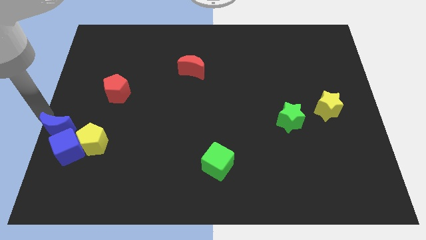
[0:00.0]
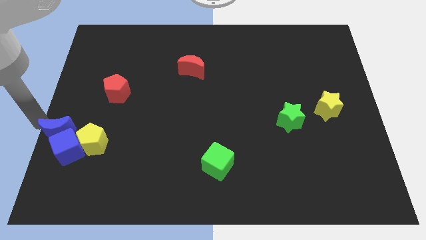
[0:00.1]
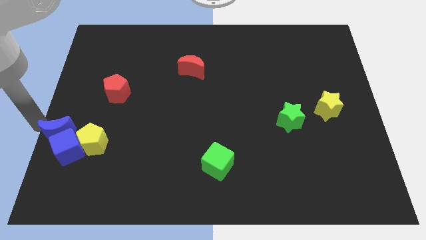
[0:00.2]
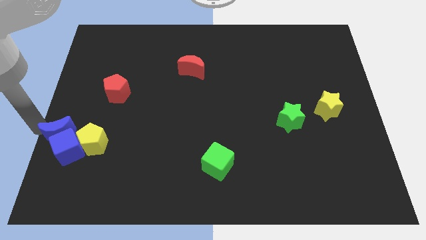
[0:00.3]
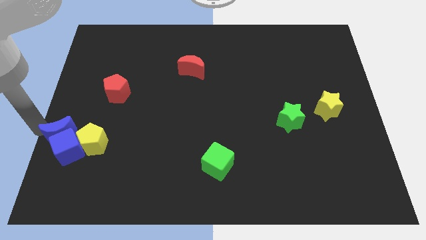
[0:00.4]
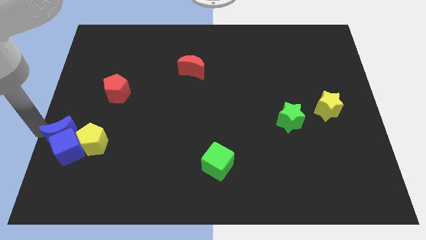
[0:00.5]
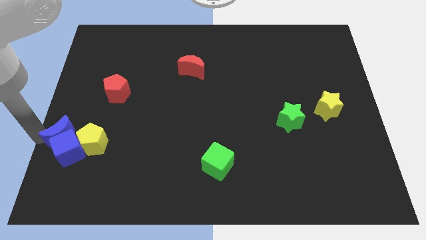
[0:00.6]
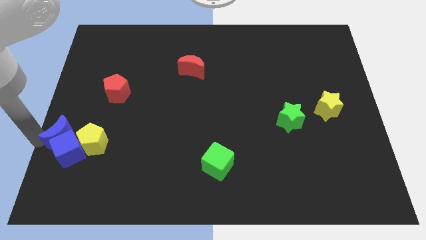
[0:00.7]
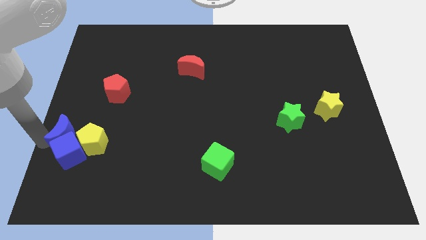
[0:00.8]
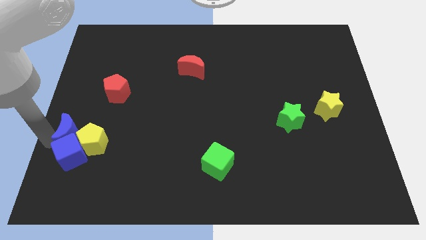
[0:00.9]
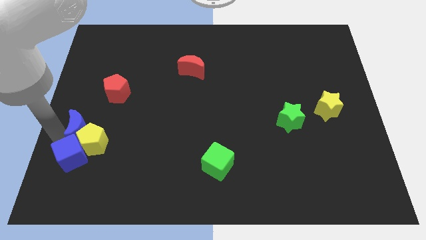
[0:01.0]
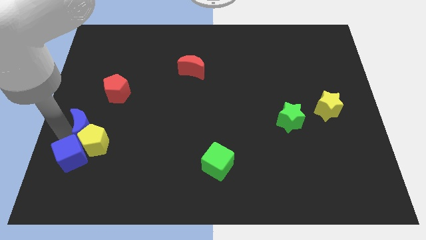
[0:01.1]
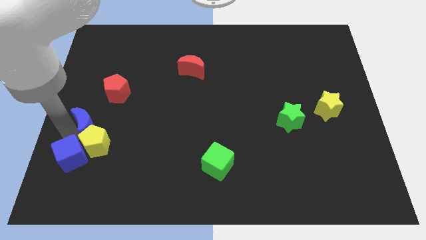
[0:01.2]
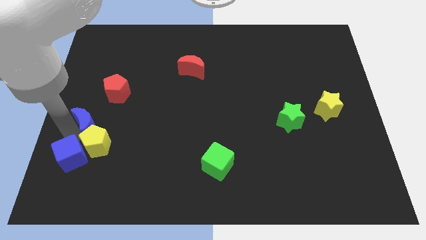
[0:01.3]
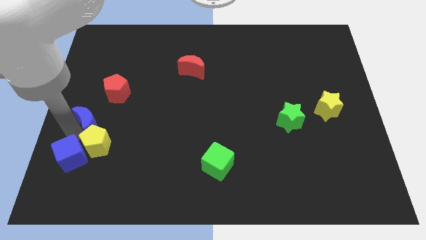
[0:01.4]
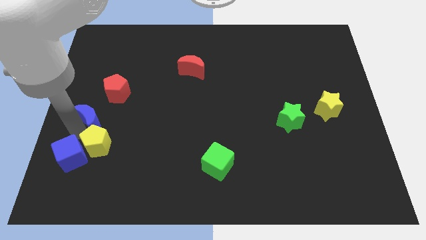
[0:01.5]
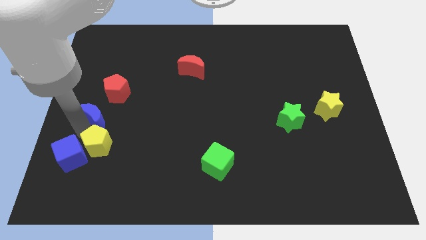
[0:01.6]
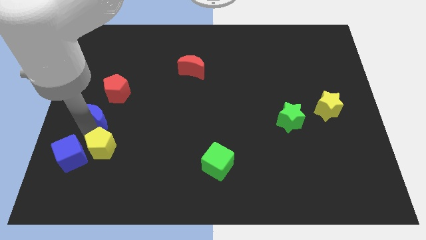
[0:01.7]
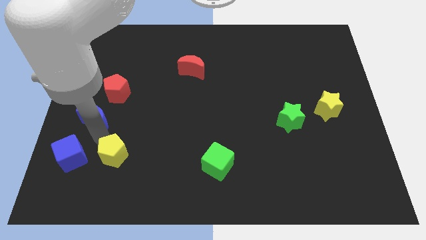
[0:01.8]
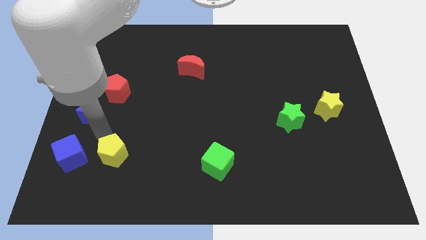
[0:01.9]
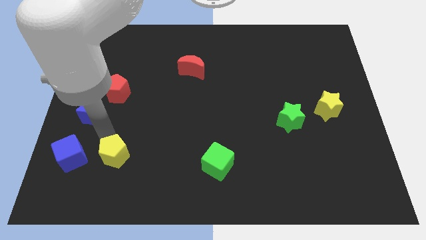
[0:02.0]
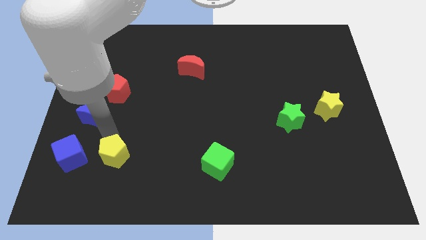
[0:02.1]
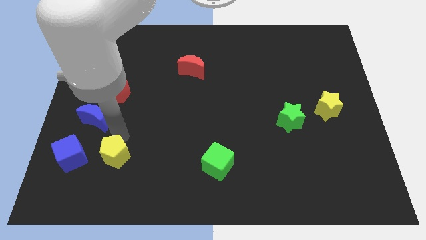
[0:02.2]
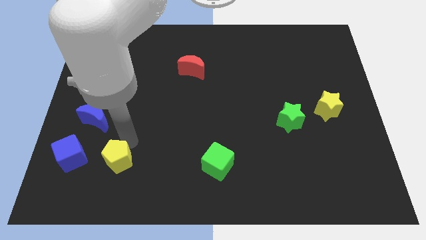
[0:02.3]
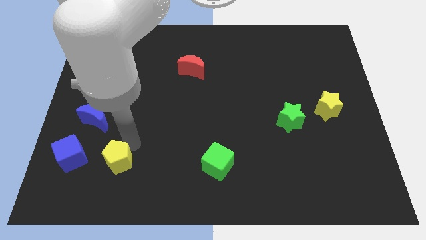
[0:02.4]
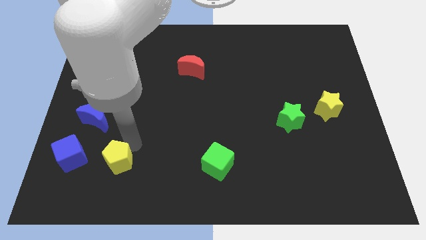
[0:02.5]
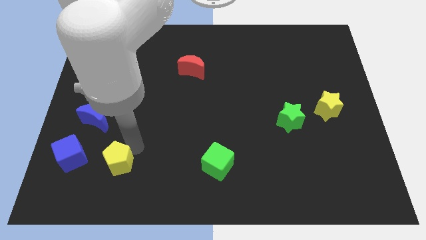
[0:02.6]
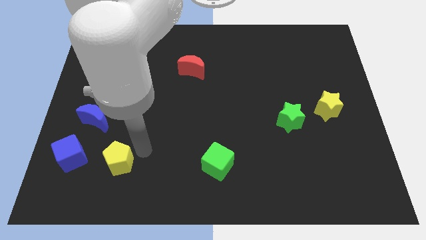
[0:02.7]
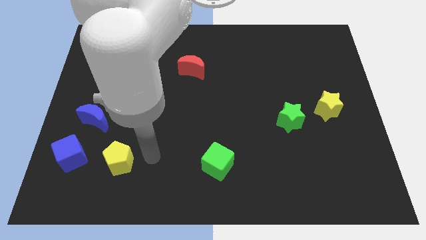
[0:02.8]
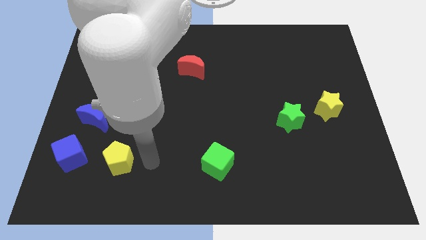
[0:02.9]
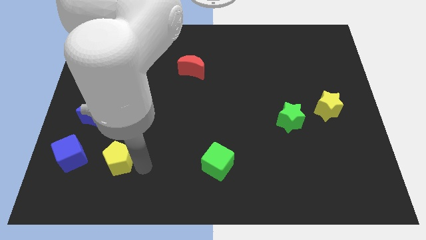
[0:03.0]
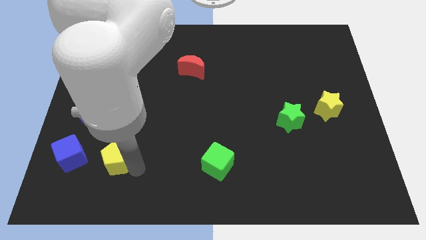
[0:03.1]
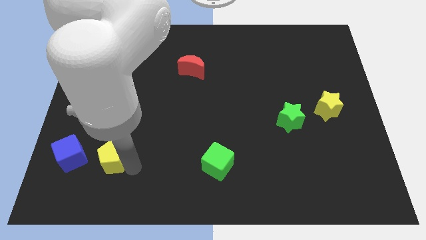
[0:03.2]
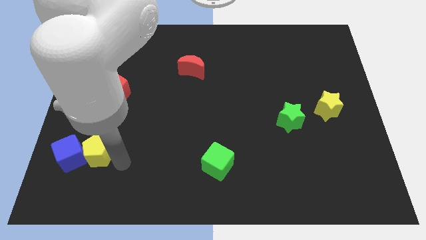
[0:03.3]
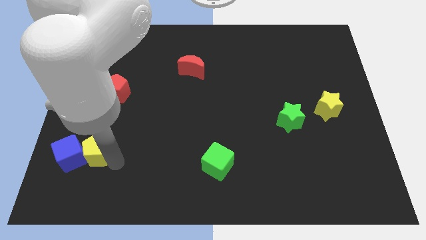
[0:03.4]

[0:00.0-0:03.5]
separate blue moon from blue cube

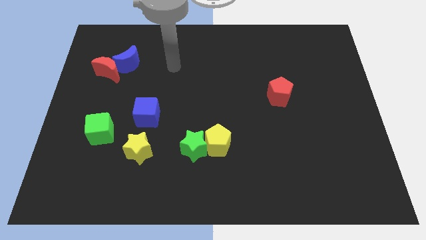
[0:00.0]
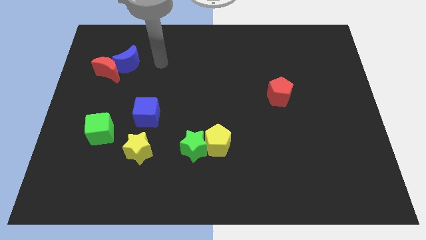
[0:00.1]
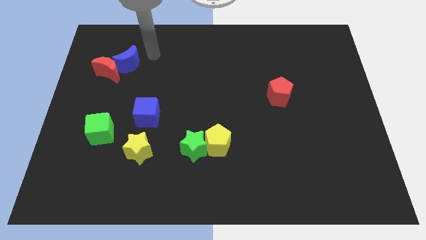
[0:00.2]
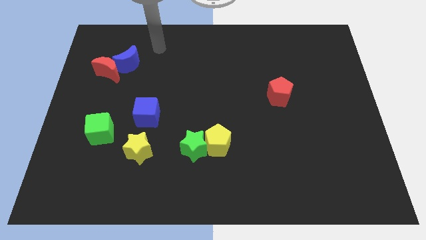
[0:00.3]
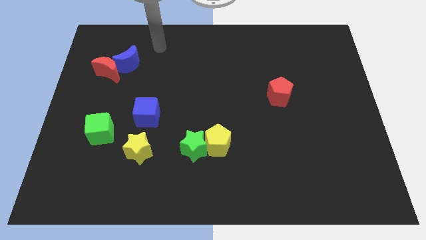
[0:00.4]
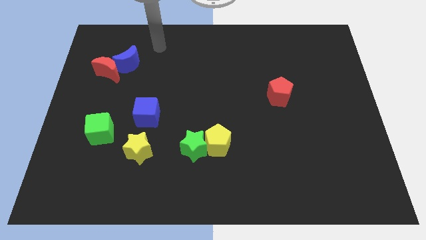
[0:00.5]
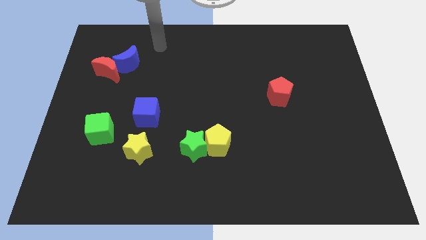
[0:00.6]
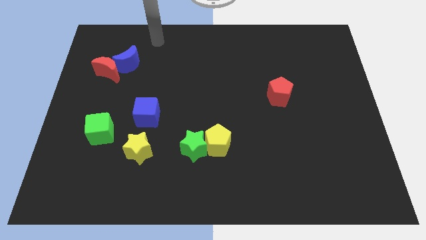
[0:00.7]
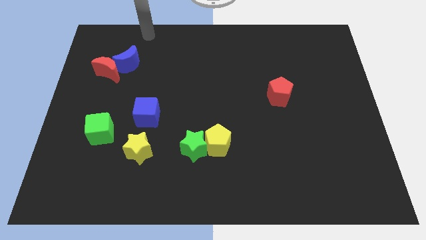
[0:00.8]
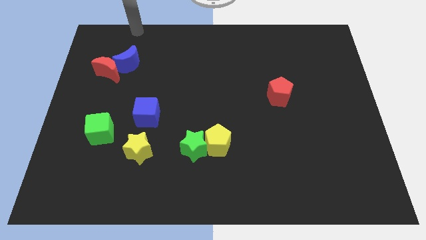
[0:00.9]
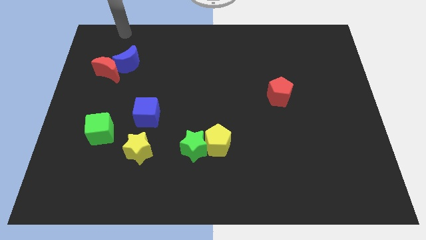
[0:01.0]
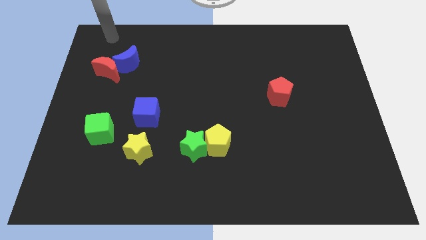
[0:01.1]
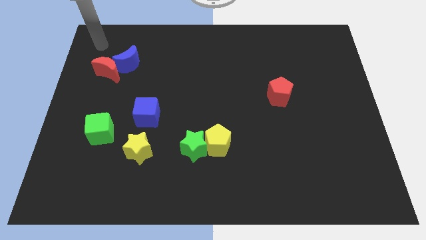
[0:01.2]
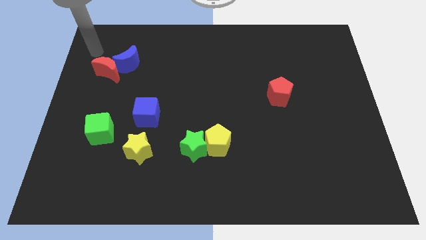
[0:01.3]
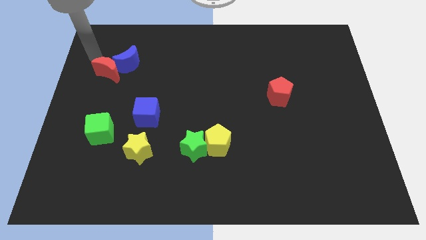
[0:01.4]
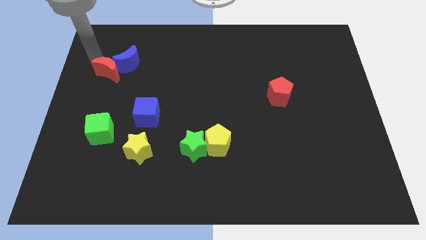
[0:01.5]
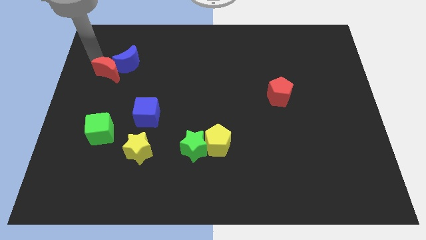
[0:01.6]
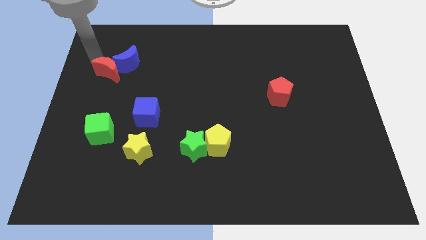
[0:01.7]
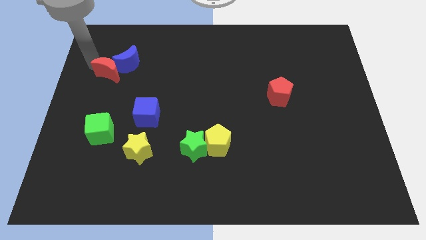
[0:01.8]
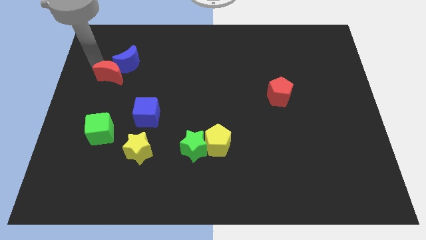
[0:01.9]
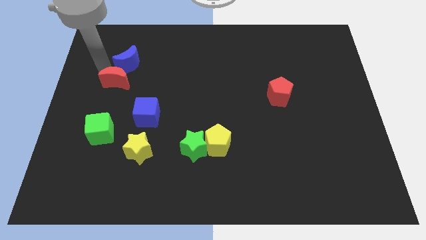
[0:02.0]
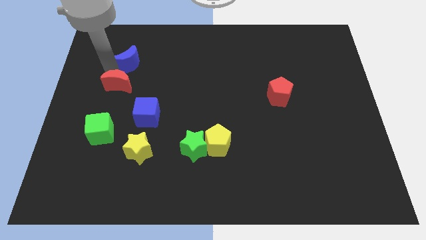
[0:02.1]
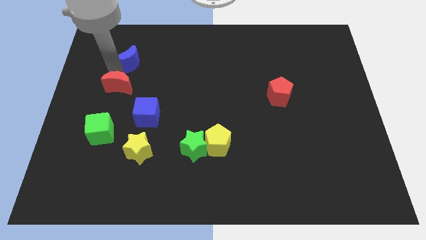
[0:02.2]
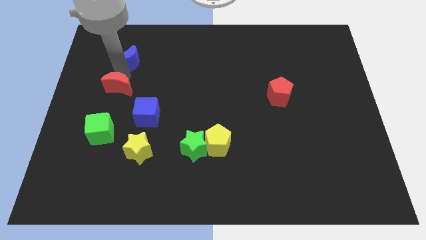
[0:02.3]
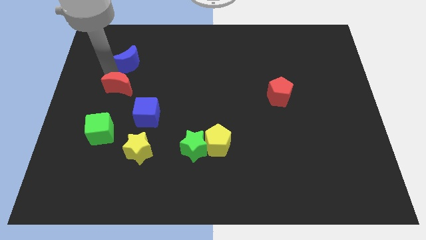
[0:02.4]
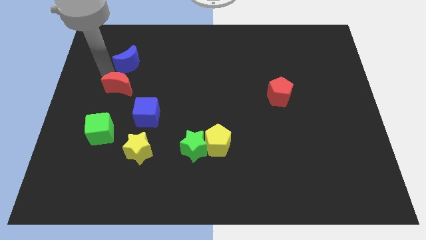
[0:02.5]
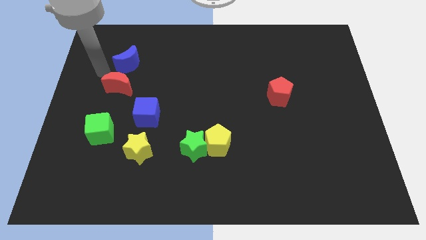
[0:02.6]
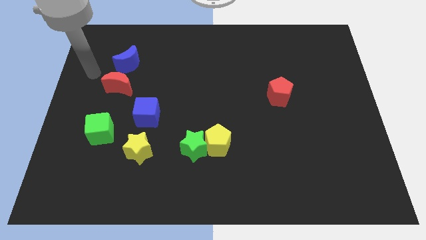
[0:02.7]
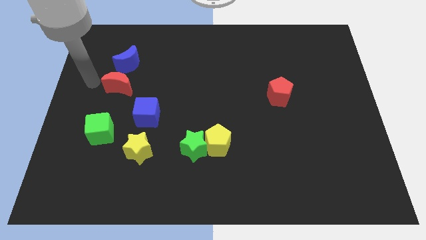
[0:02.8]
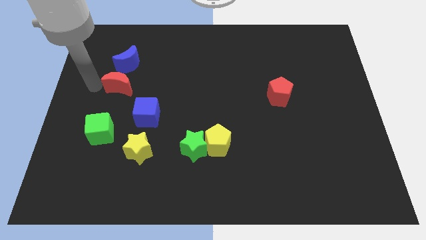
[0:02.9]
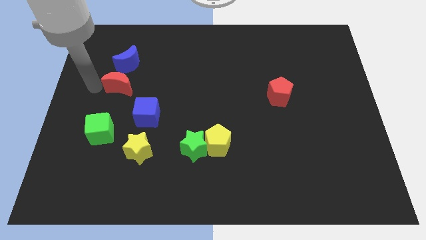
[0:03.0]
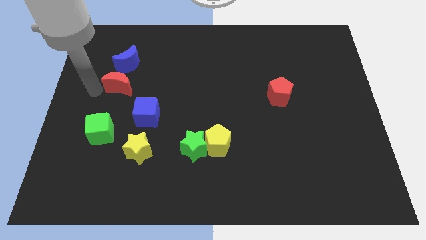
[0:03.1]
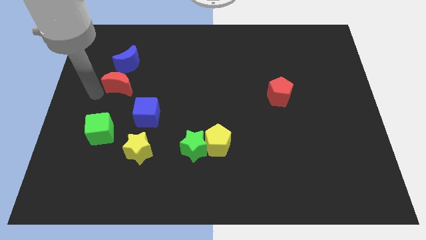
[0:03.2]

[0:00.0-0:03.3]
separate red crescent from the blue crescent

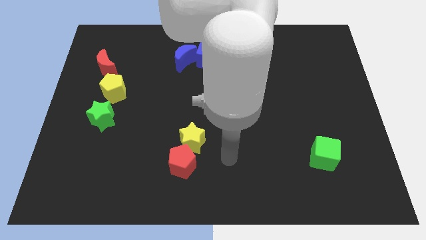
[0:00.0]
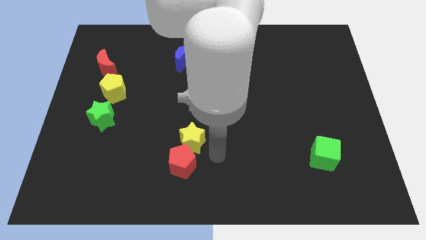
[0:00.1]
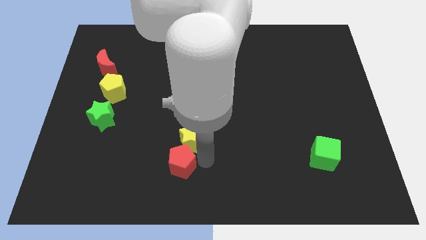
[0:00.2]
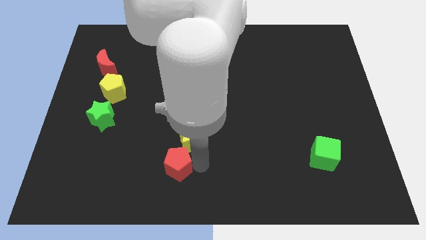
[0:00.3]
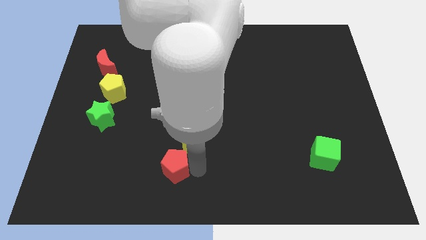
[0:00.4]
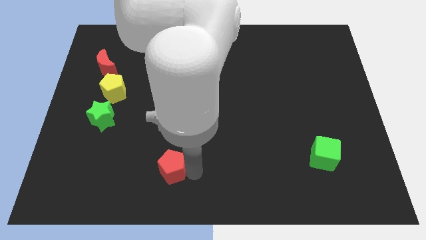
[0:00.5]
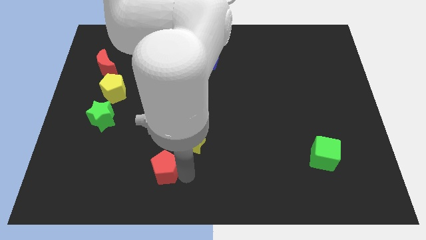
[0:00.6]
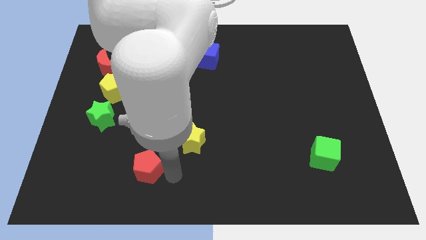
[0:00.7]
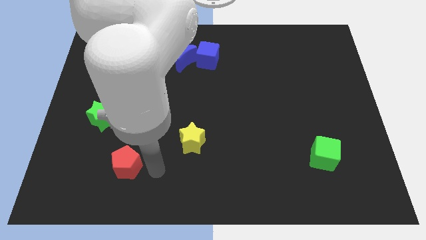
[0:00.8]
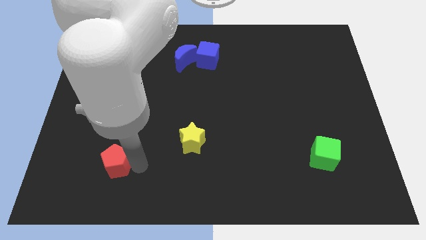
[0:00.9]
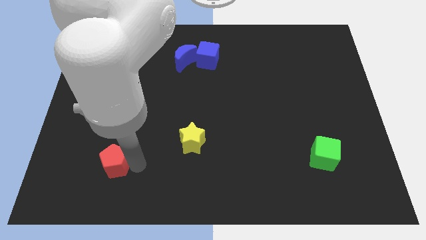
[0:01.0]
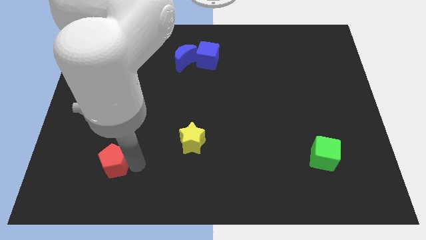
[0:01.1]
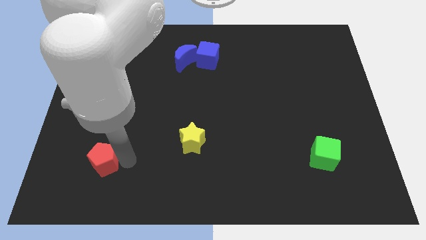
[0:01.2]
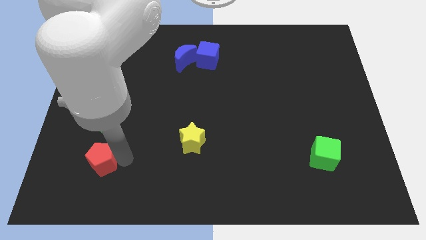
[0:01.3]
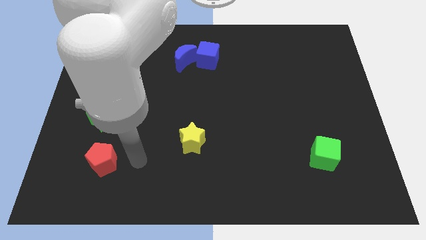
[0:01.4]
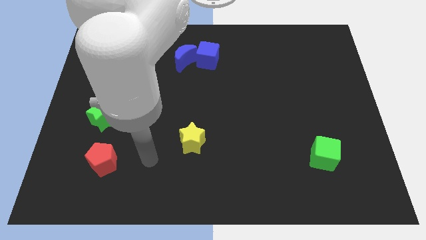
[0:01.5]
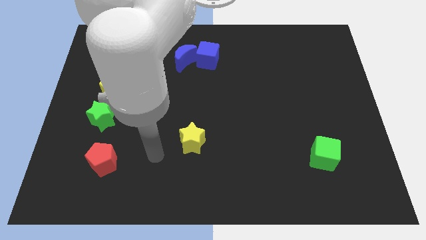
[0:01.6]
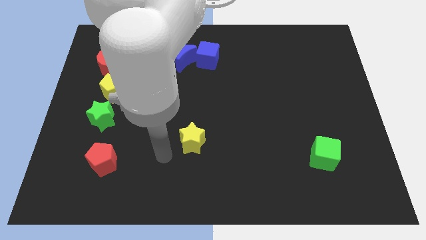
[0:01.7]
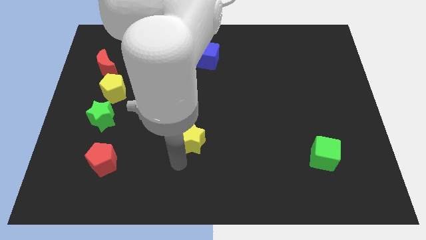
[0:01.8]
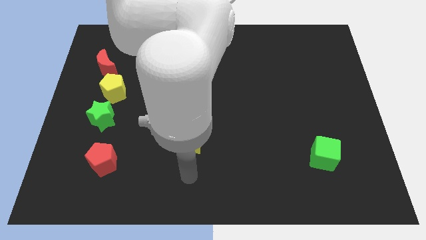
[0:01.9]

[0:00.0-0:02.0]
put the red pentagon below the green star

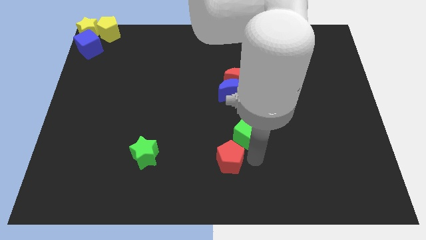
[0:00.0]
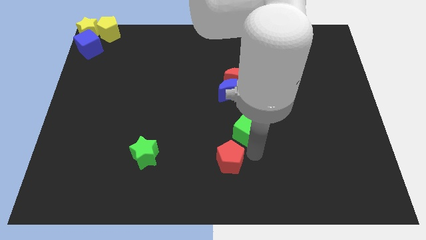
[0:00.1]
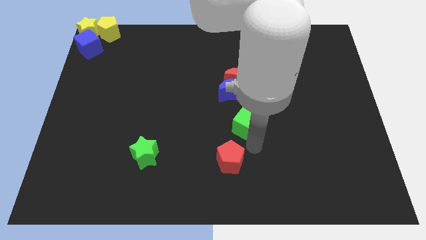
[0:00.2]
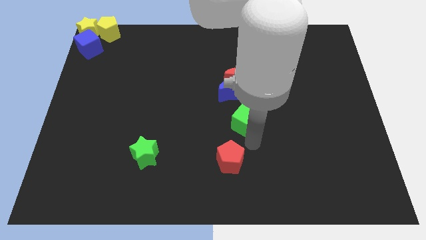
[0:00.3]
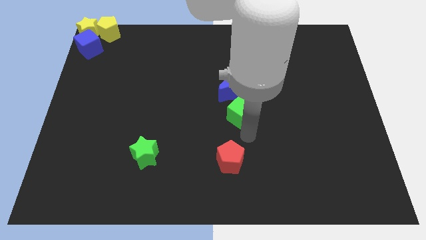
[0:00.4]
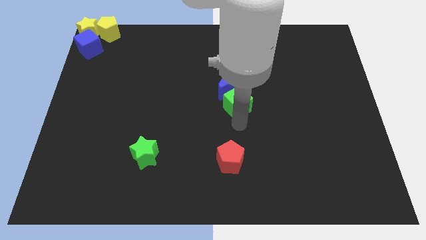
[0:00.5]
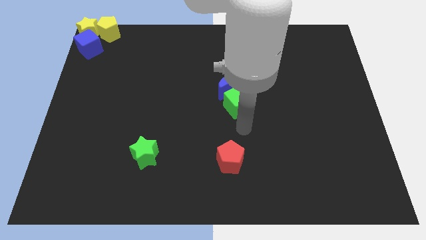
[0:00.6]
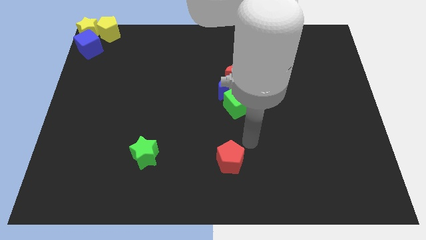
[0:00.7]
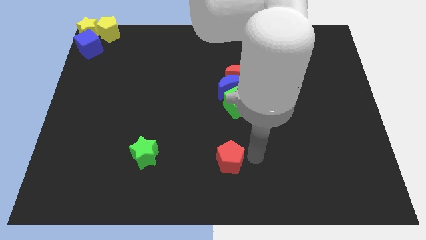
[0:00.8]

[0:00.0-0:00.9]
place green cube below the blue moon
